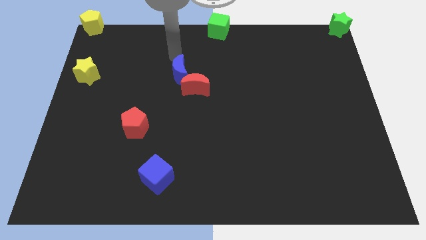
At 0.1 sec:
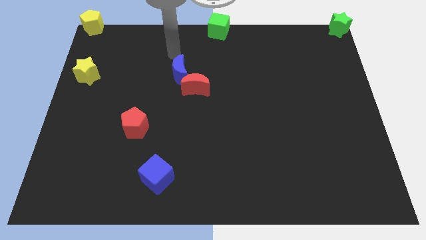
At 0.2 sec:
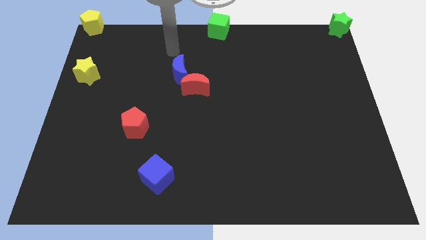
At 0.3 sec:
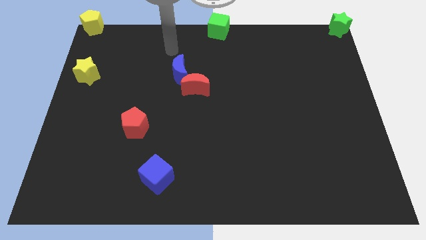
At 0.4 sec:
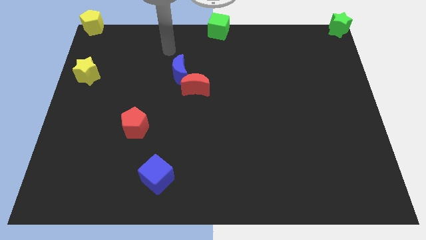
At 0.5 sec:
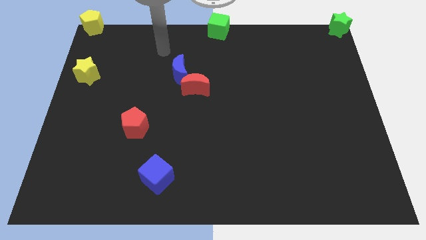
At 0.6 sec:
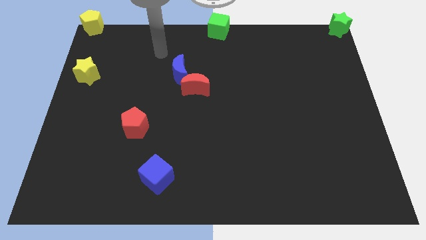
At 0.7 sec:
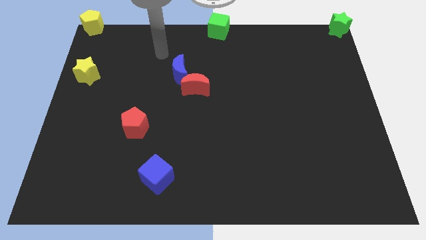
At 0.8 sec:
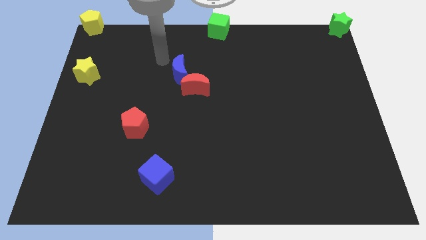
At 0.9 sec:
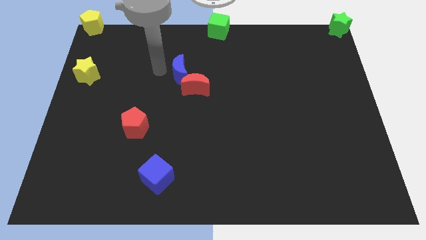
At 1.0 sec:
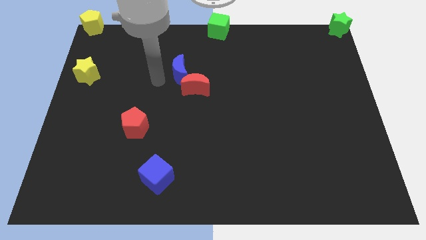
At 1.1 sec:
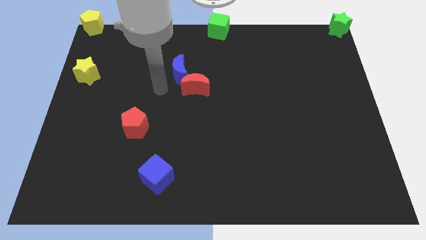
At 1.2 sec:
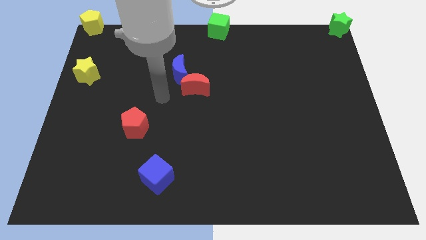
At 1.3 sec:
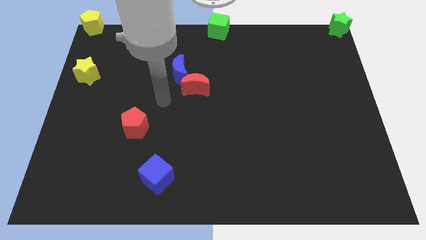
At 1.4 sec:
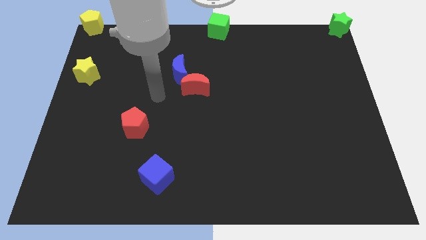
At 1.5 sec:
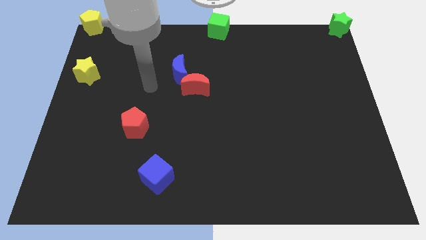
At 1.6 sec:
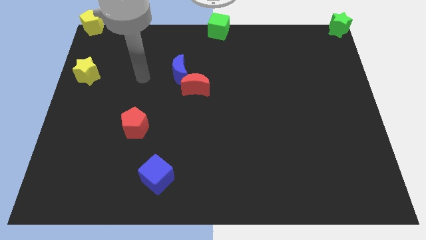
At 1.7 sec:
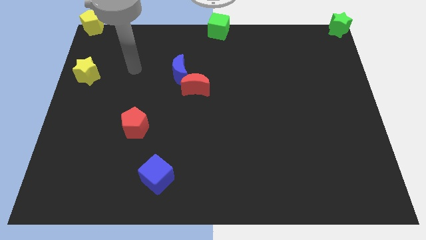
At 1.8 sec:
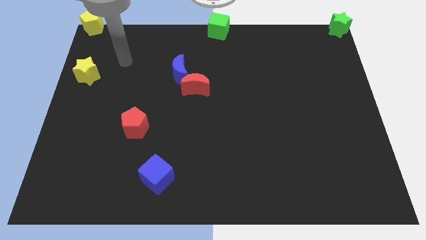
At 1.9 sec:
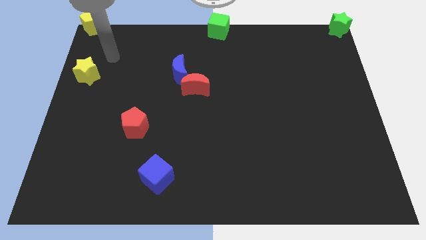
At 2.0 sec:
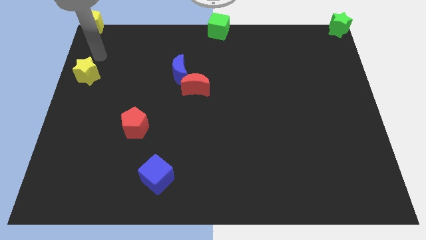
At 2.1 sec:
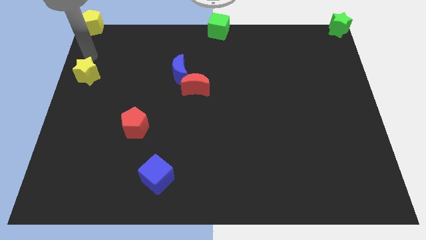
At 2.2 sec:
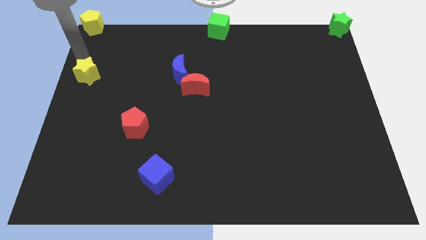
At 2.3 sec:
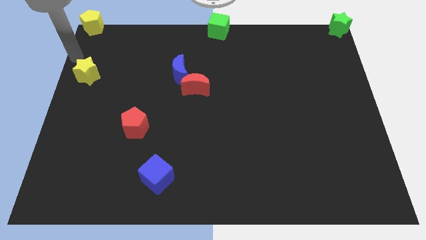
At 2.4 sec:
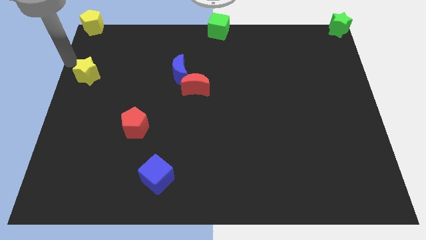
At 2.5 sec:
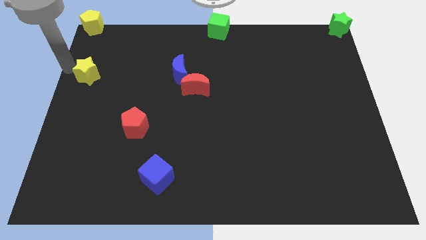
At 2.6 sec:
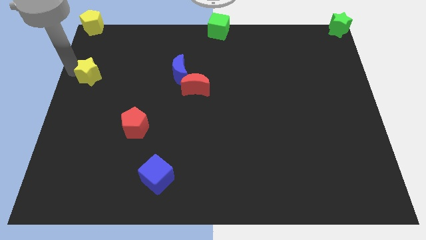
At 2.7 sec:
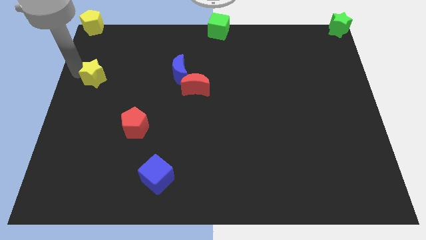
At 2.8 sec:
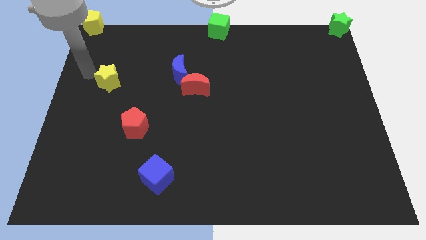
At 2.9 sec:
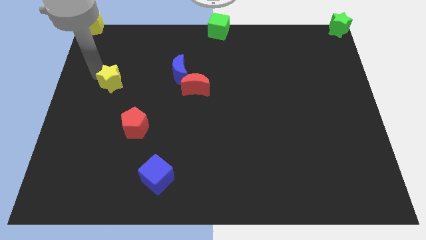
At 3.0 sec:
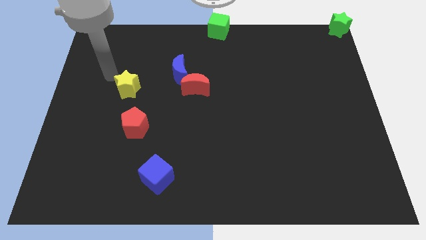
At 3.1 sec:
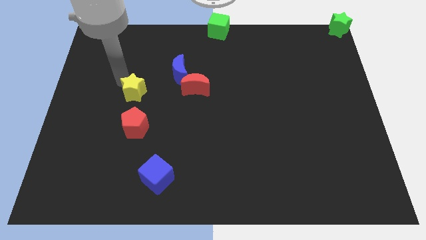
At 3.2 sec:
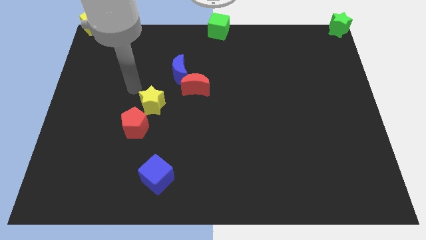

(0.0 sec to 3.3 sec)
move the yellow star to the top of the red pentagon

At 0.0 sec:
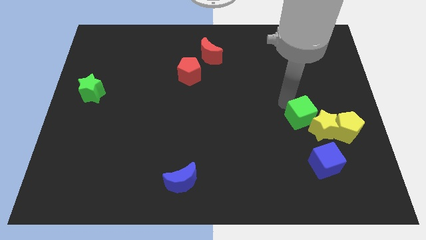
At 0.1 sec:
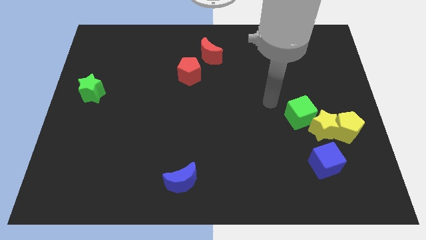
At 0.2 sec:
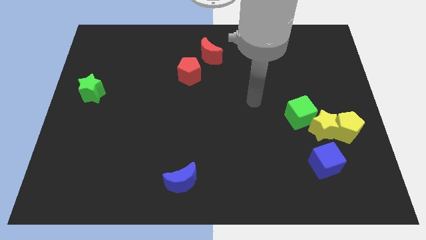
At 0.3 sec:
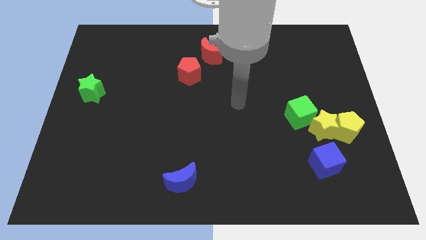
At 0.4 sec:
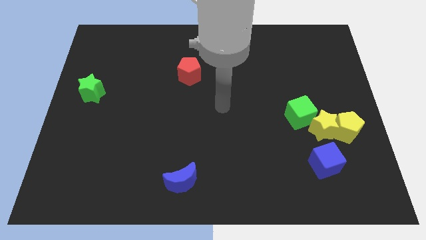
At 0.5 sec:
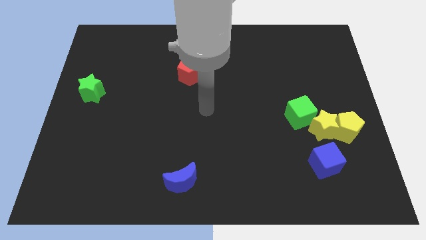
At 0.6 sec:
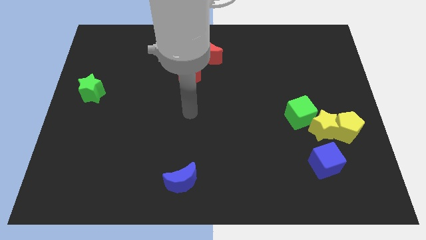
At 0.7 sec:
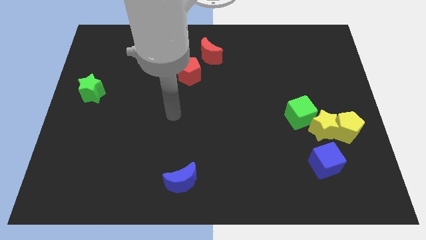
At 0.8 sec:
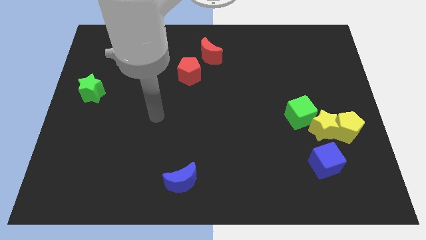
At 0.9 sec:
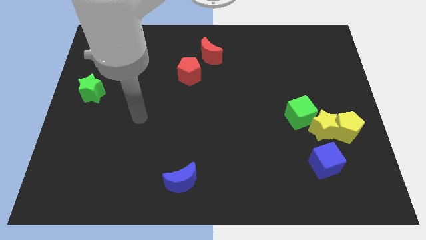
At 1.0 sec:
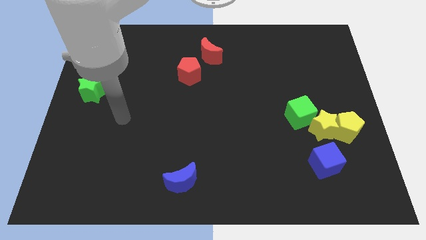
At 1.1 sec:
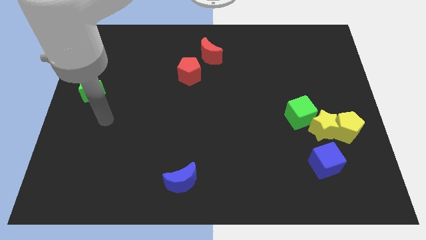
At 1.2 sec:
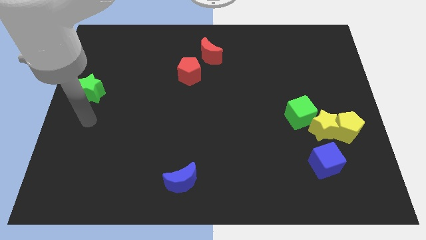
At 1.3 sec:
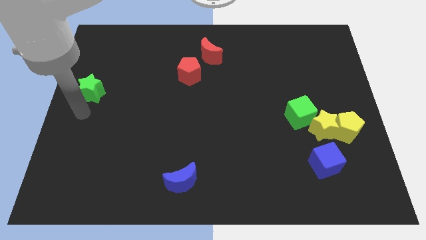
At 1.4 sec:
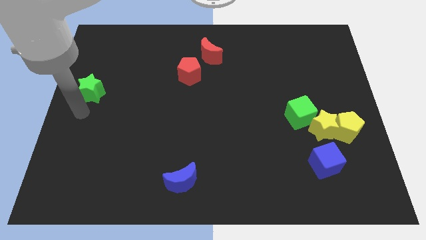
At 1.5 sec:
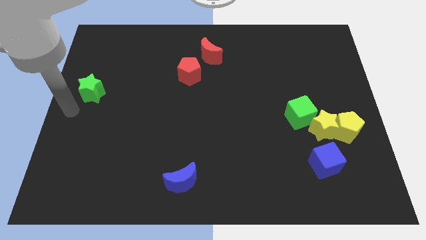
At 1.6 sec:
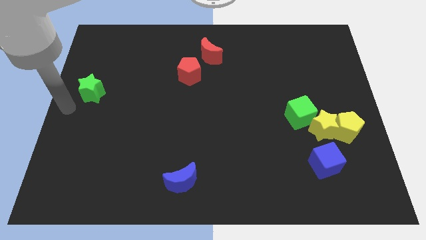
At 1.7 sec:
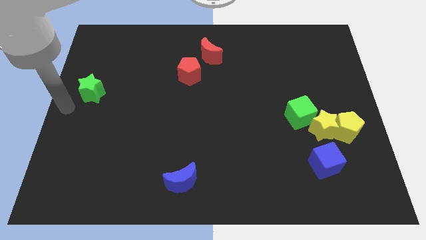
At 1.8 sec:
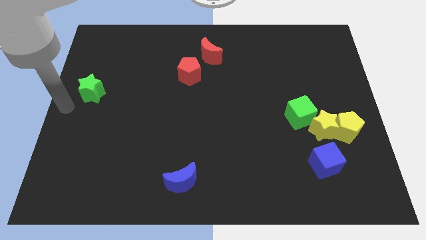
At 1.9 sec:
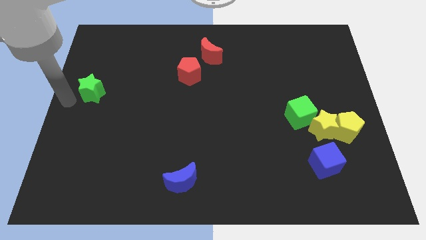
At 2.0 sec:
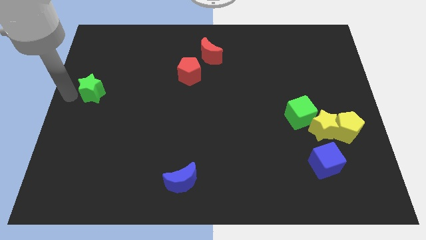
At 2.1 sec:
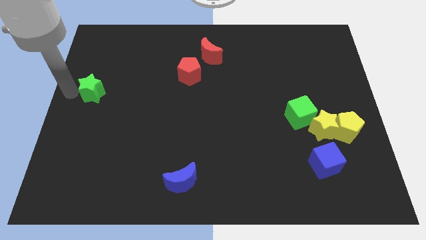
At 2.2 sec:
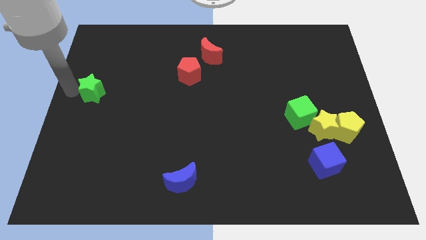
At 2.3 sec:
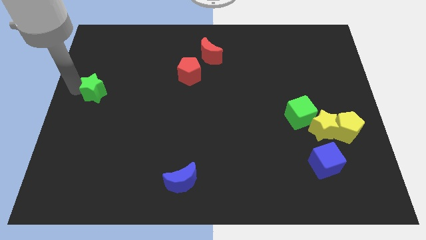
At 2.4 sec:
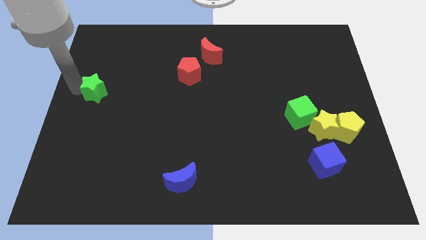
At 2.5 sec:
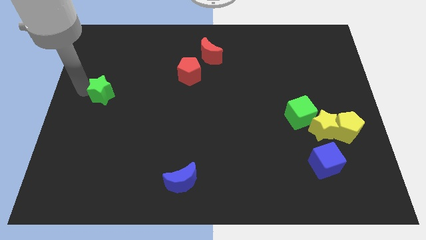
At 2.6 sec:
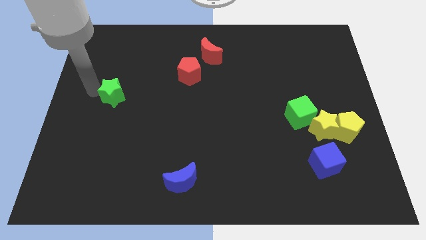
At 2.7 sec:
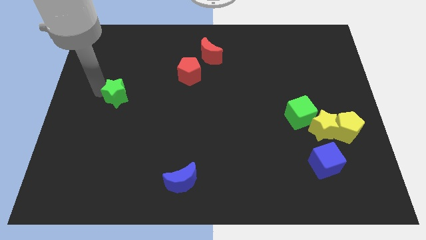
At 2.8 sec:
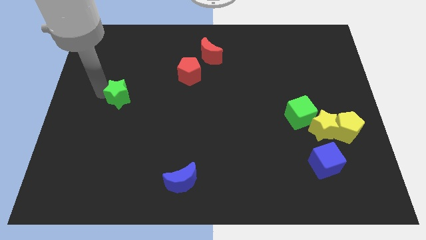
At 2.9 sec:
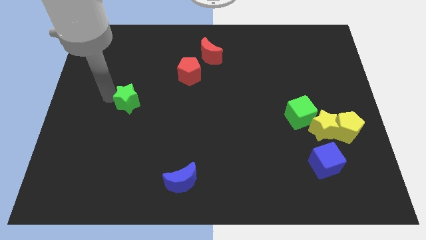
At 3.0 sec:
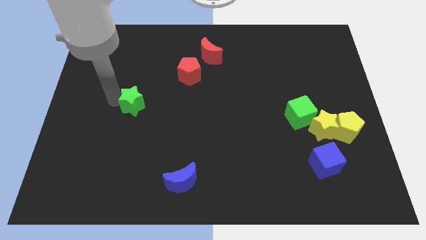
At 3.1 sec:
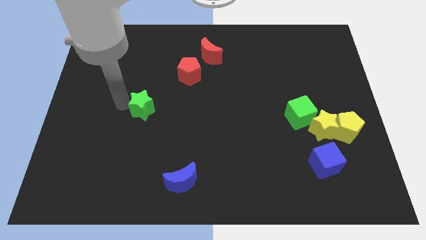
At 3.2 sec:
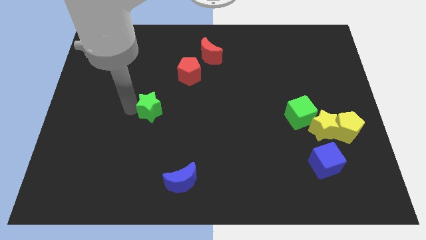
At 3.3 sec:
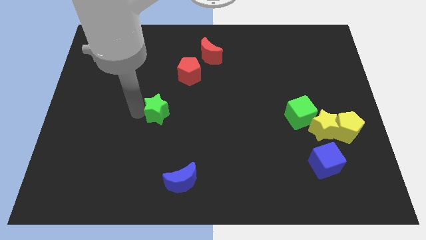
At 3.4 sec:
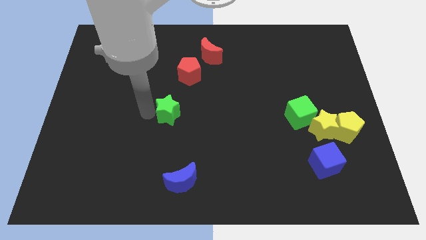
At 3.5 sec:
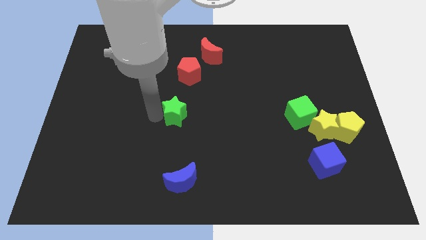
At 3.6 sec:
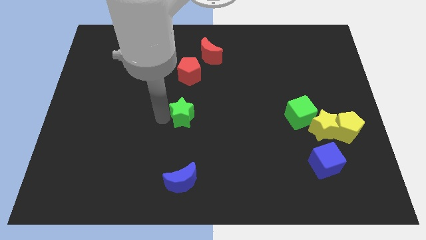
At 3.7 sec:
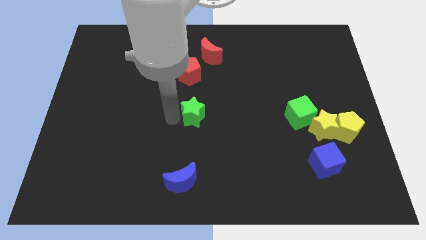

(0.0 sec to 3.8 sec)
move the green star to the bottom of the red pentagon

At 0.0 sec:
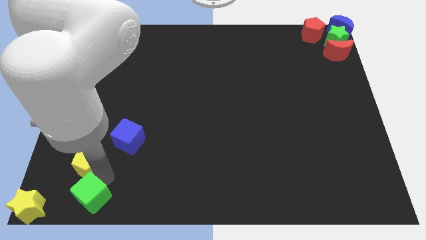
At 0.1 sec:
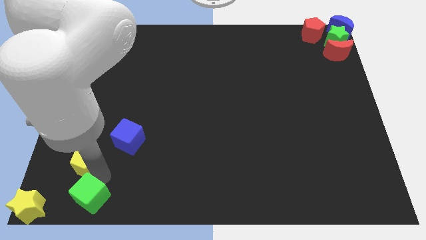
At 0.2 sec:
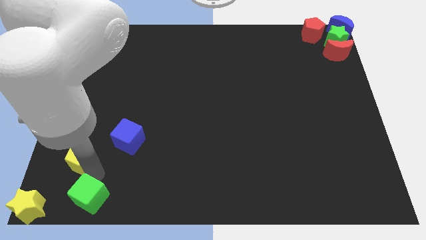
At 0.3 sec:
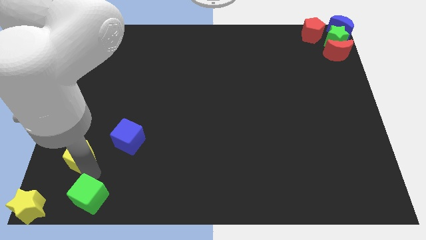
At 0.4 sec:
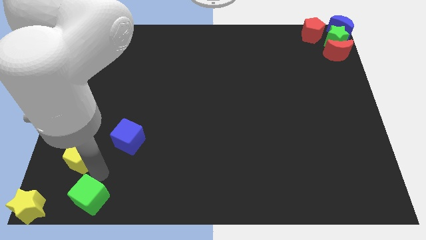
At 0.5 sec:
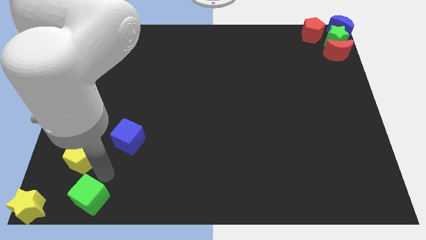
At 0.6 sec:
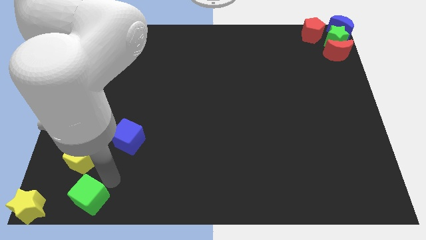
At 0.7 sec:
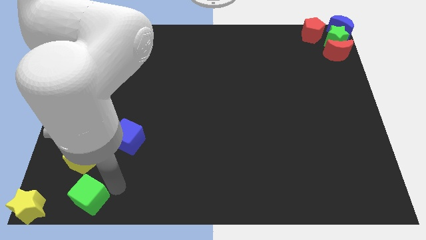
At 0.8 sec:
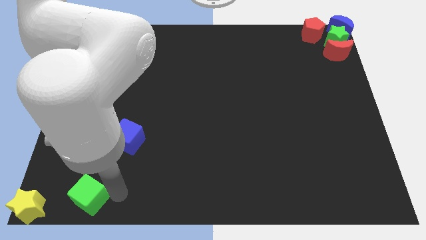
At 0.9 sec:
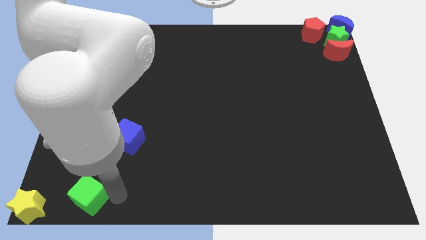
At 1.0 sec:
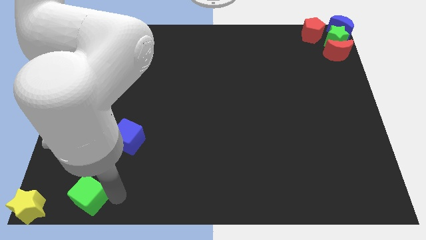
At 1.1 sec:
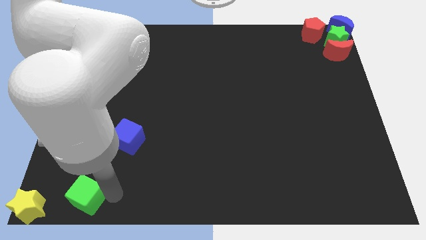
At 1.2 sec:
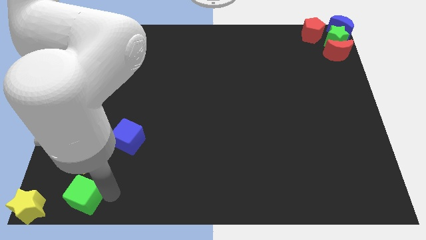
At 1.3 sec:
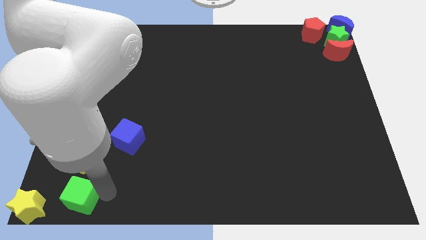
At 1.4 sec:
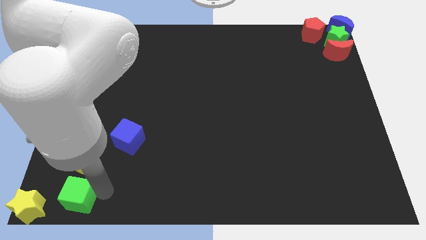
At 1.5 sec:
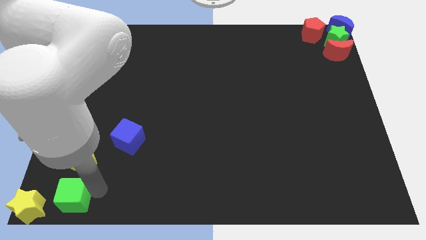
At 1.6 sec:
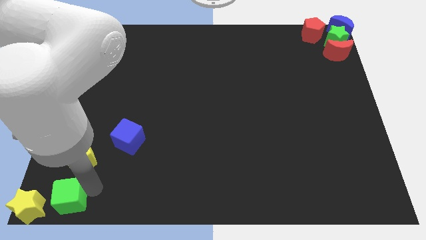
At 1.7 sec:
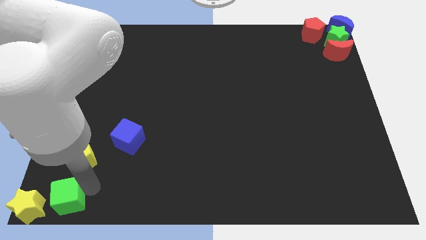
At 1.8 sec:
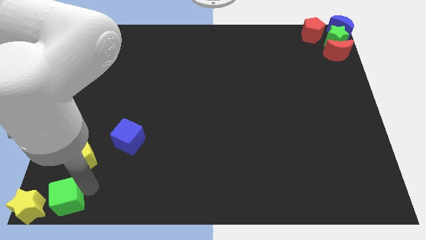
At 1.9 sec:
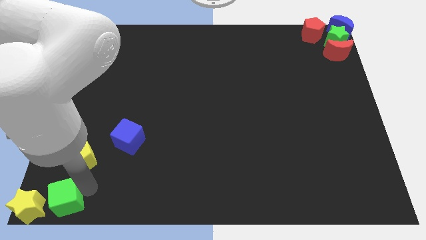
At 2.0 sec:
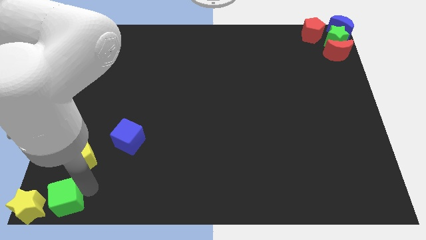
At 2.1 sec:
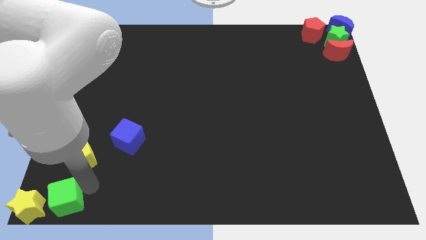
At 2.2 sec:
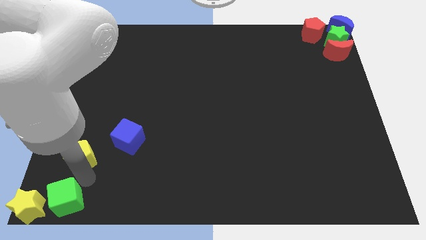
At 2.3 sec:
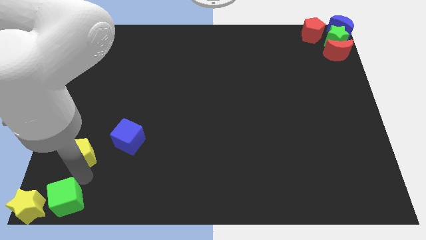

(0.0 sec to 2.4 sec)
move green cube away from the yellow pentagon
